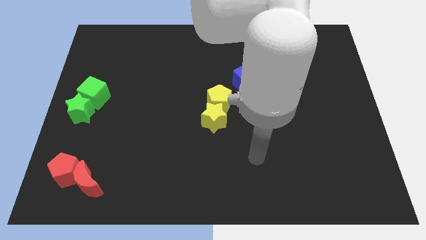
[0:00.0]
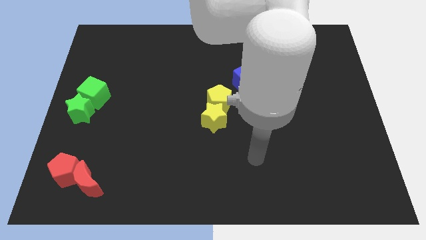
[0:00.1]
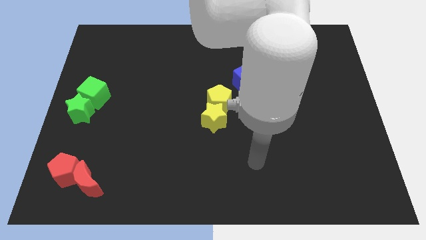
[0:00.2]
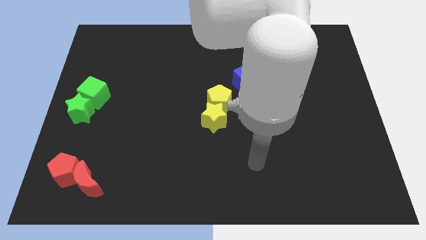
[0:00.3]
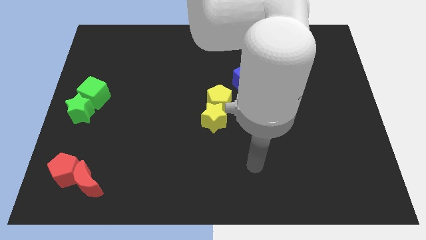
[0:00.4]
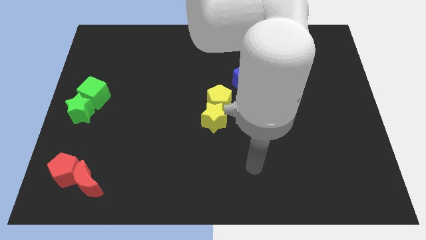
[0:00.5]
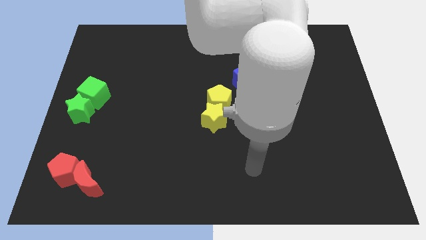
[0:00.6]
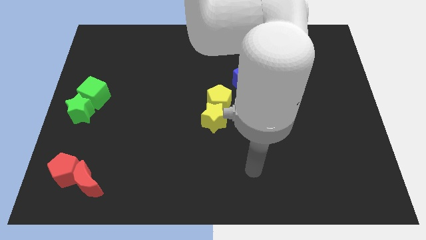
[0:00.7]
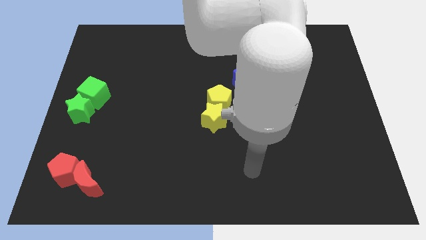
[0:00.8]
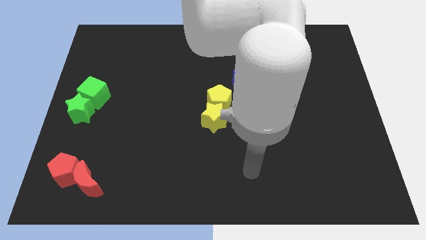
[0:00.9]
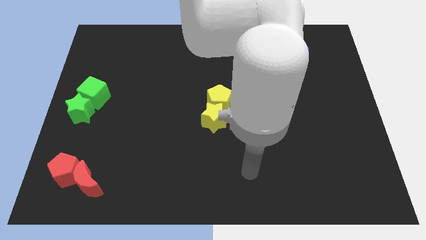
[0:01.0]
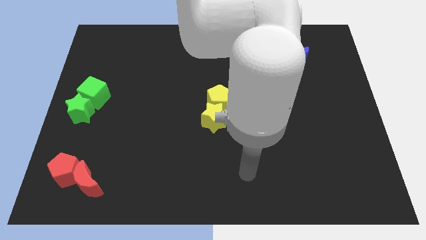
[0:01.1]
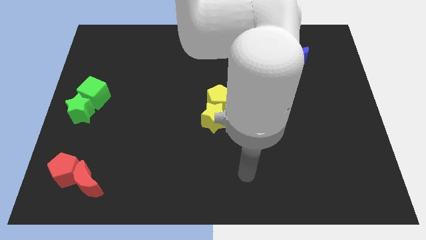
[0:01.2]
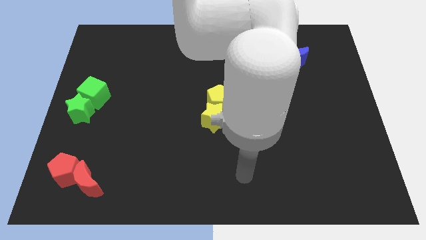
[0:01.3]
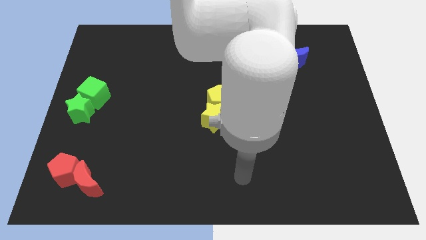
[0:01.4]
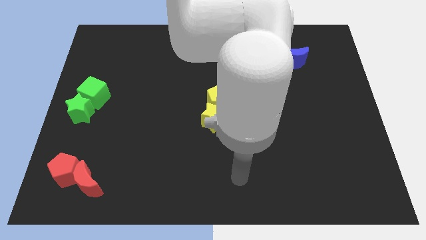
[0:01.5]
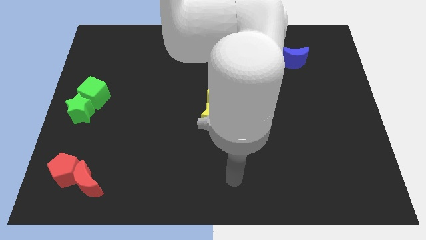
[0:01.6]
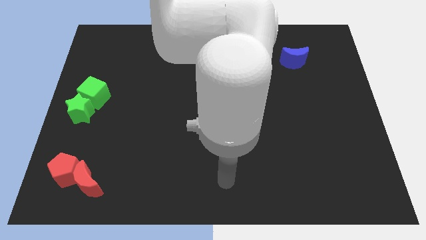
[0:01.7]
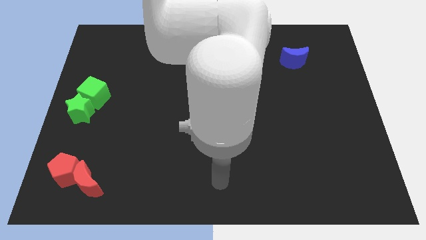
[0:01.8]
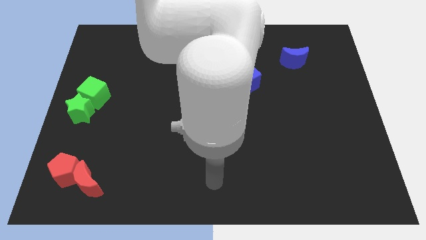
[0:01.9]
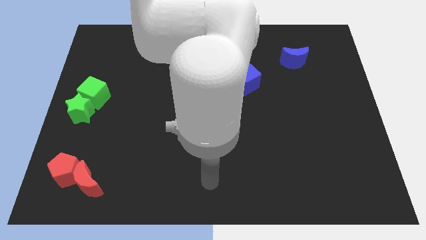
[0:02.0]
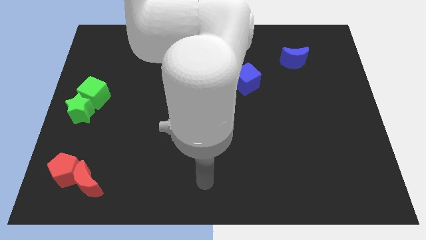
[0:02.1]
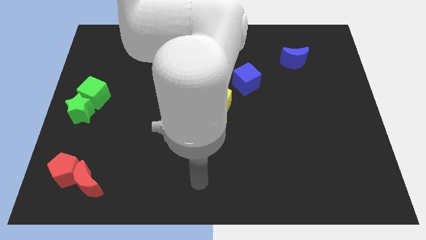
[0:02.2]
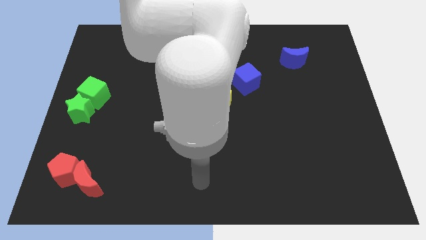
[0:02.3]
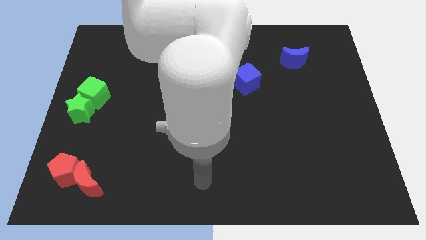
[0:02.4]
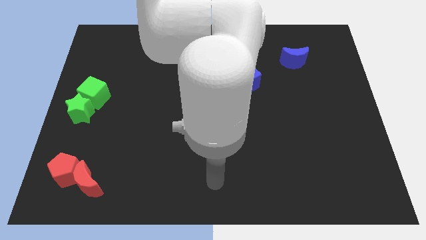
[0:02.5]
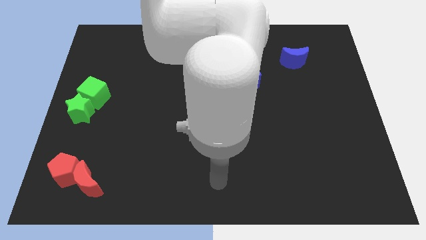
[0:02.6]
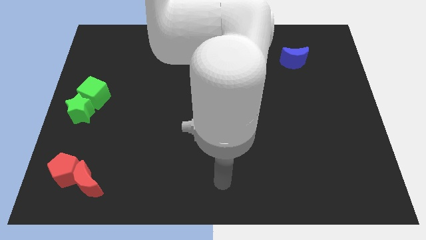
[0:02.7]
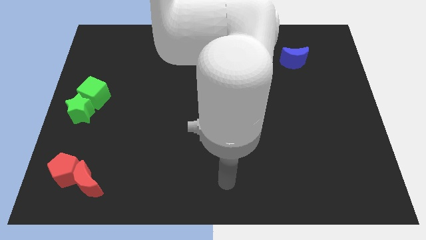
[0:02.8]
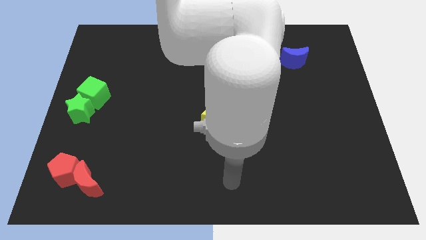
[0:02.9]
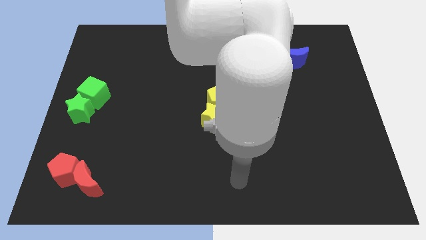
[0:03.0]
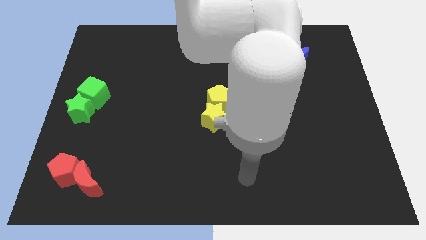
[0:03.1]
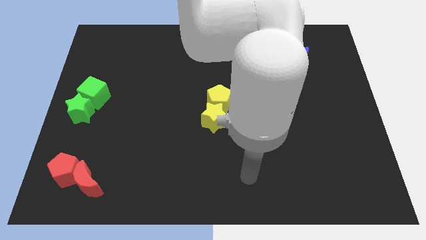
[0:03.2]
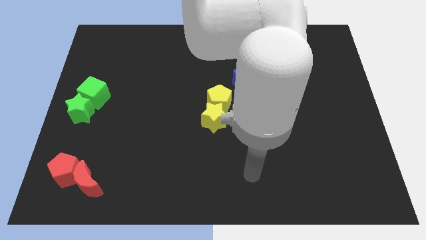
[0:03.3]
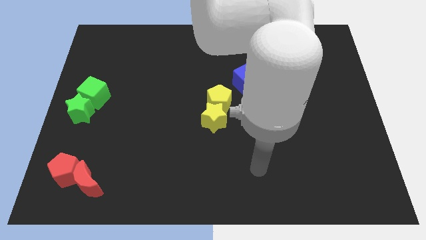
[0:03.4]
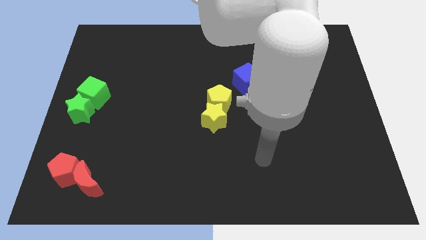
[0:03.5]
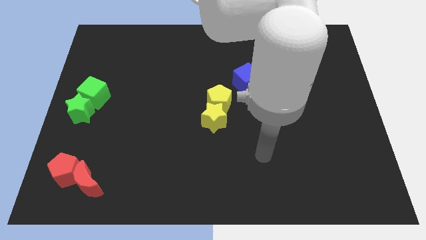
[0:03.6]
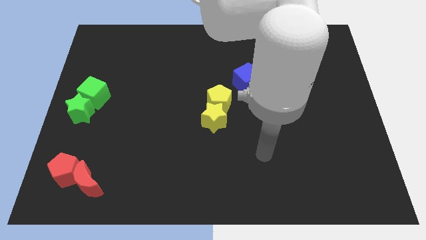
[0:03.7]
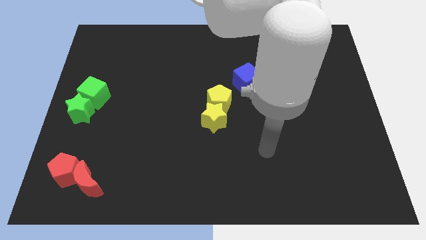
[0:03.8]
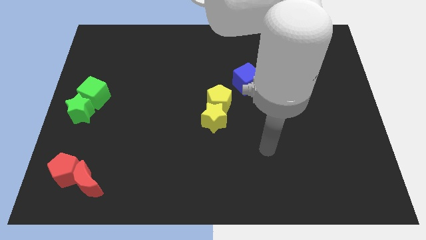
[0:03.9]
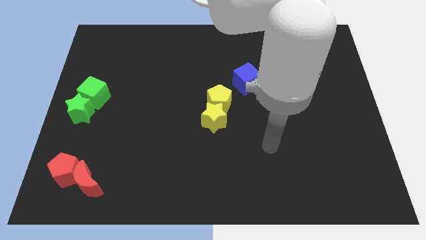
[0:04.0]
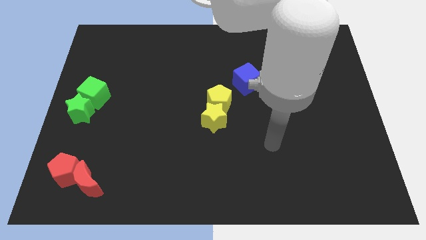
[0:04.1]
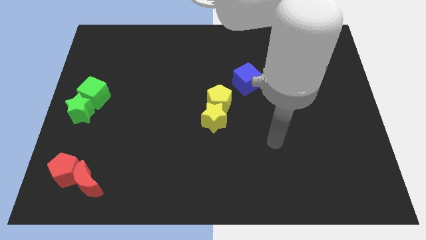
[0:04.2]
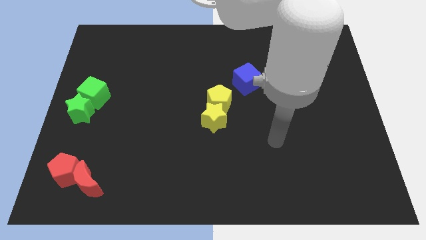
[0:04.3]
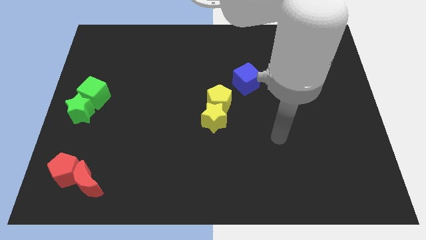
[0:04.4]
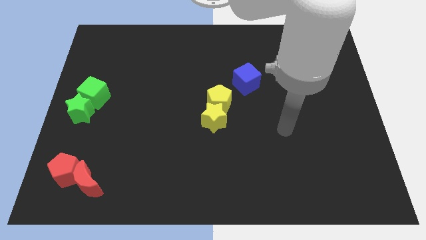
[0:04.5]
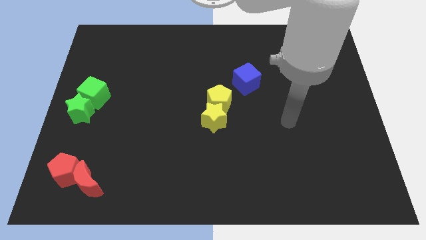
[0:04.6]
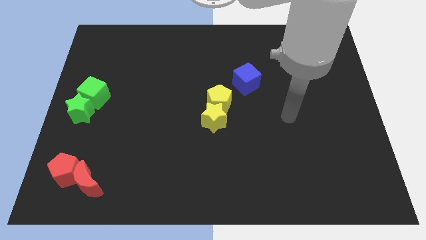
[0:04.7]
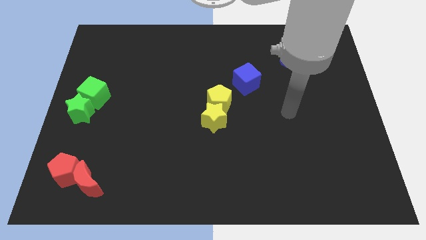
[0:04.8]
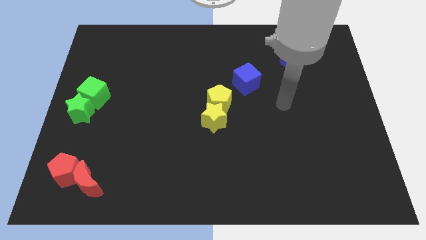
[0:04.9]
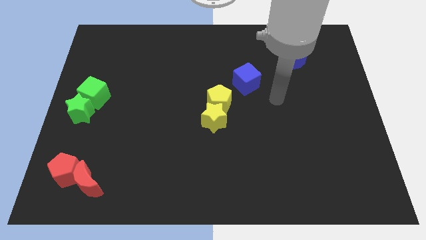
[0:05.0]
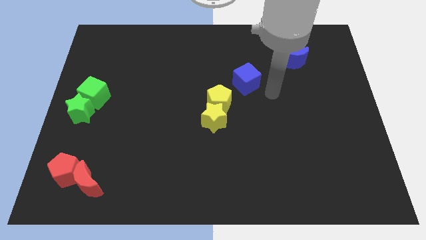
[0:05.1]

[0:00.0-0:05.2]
place your arm right of the yellow pentagon

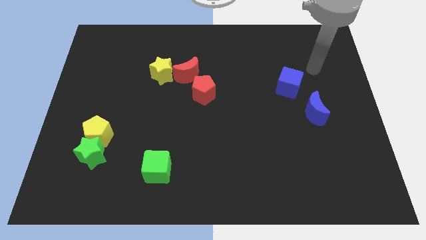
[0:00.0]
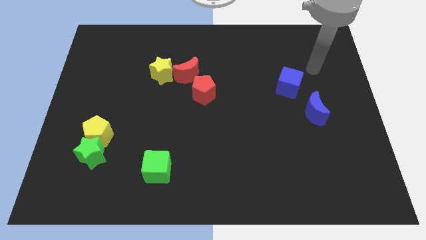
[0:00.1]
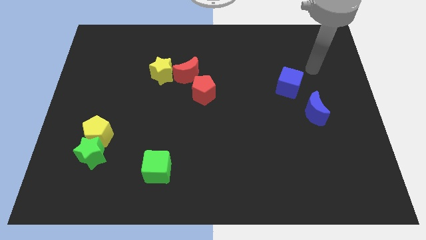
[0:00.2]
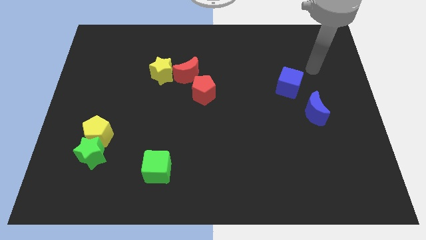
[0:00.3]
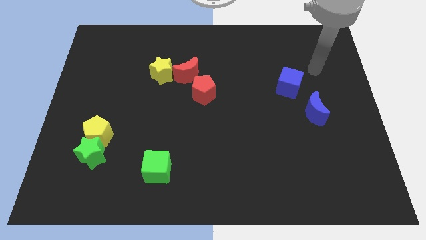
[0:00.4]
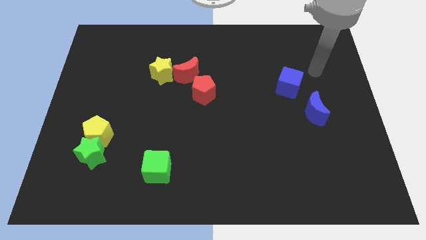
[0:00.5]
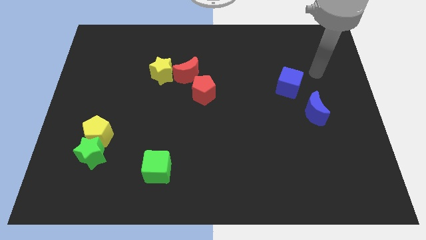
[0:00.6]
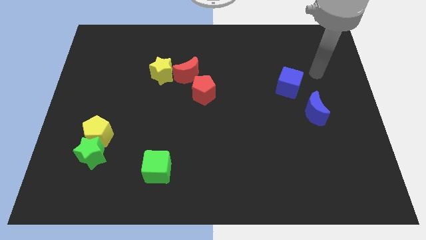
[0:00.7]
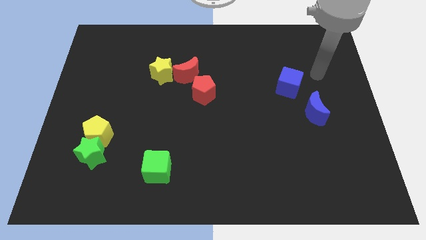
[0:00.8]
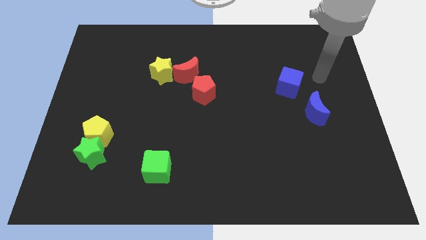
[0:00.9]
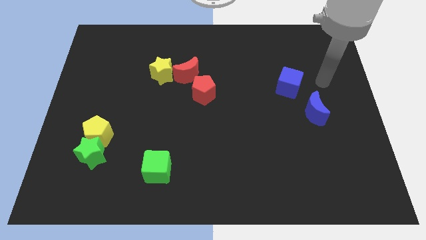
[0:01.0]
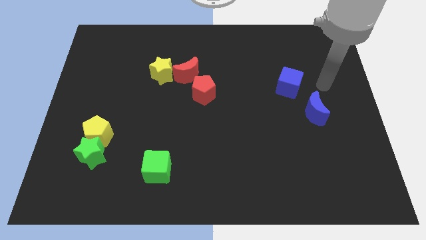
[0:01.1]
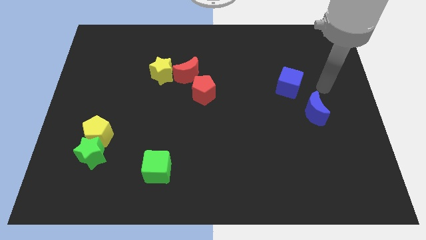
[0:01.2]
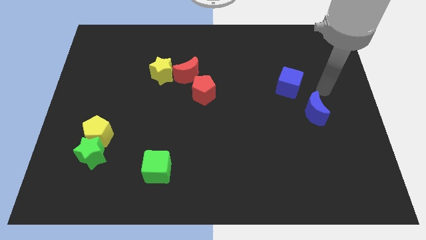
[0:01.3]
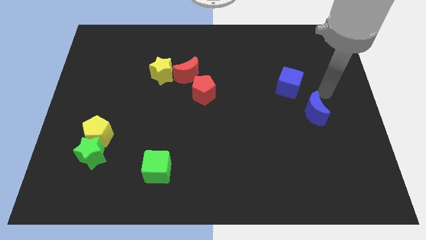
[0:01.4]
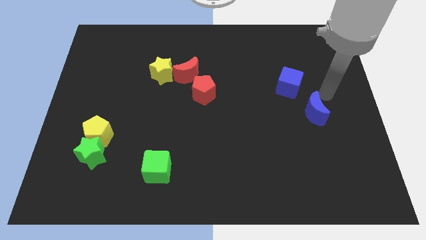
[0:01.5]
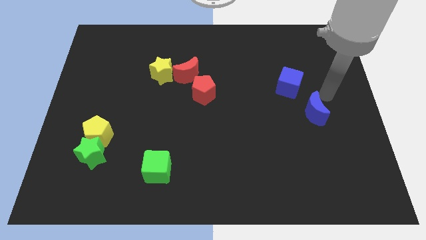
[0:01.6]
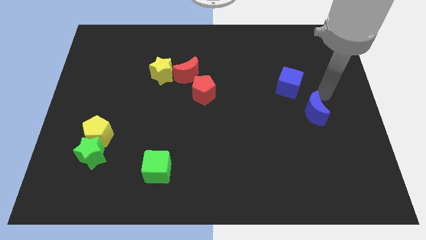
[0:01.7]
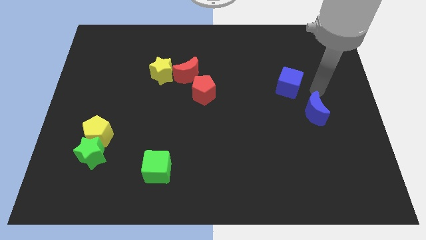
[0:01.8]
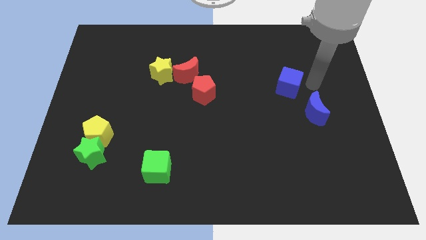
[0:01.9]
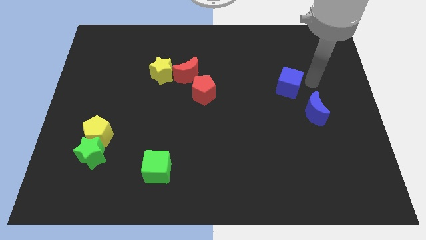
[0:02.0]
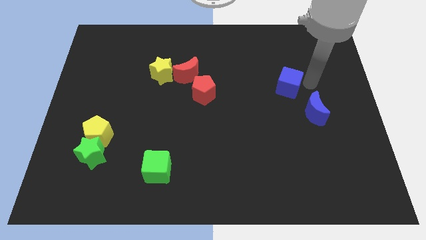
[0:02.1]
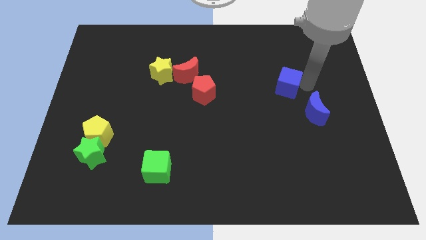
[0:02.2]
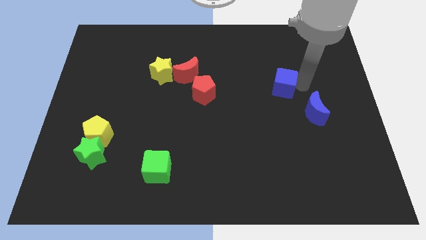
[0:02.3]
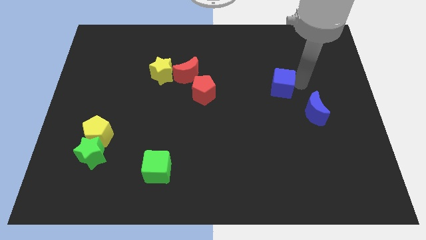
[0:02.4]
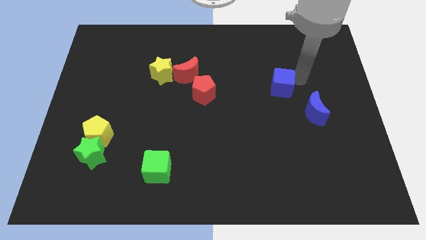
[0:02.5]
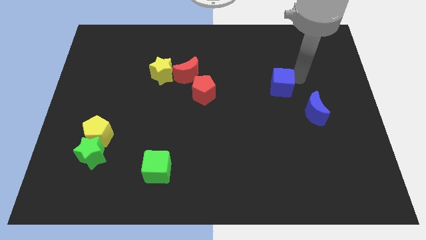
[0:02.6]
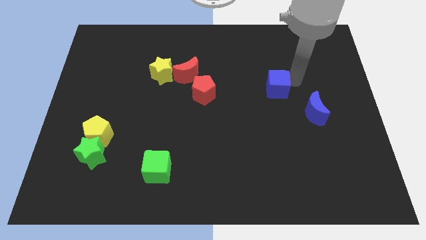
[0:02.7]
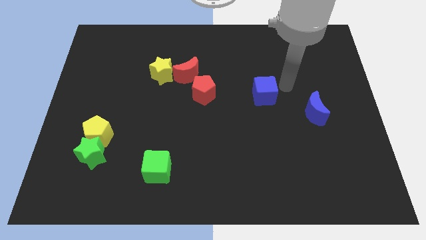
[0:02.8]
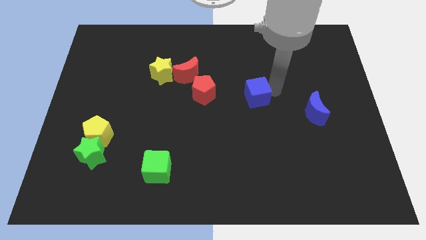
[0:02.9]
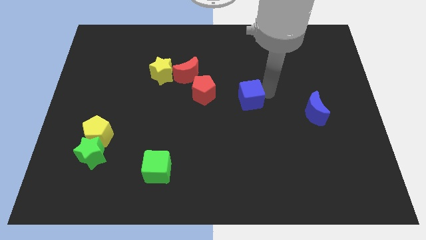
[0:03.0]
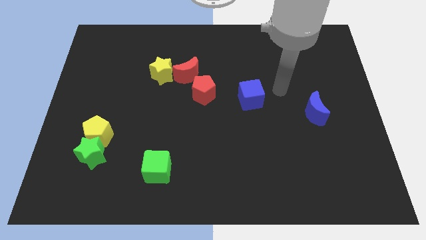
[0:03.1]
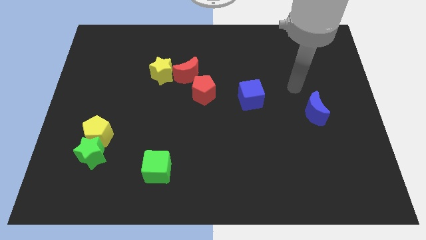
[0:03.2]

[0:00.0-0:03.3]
move the blue cube towards the right of the red pentagon

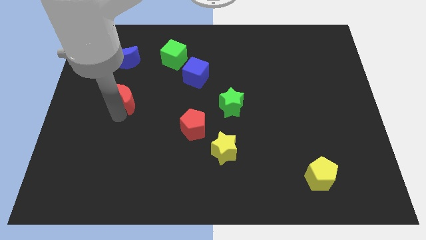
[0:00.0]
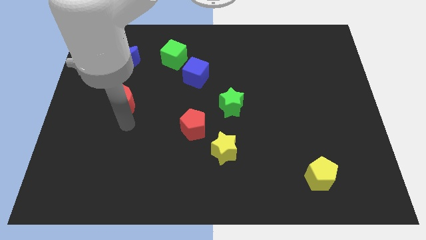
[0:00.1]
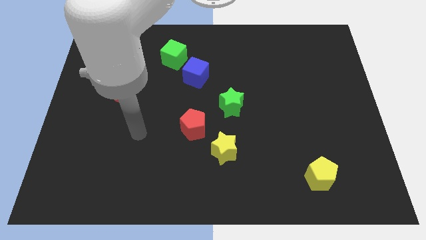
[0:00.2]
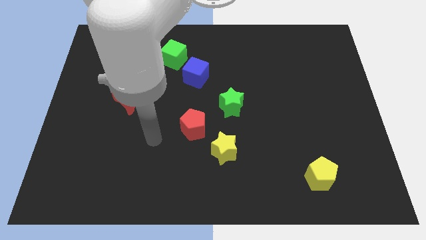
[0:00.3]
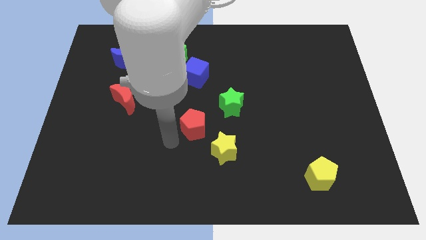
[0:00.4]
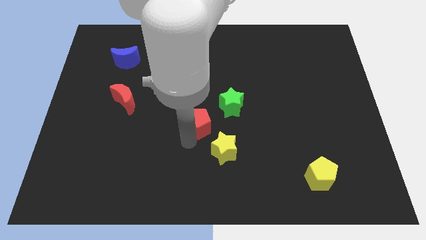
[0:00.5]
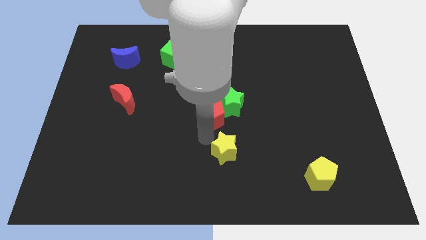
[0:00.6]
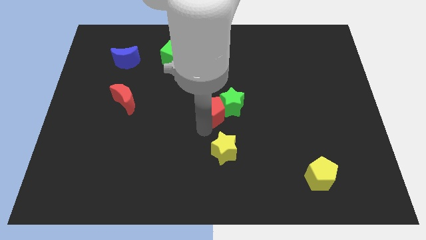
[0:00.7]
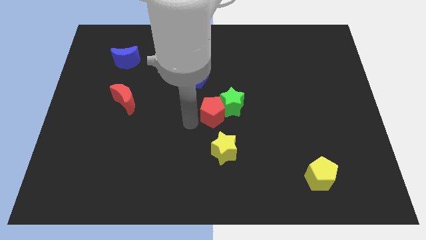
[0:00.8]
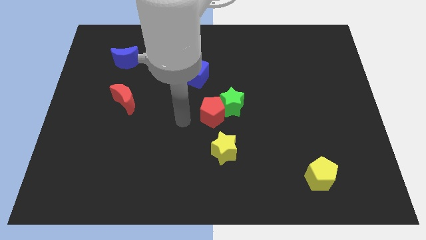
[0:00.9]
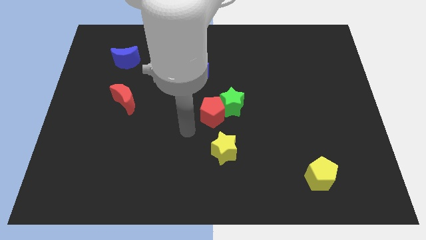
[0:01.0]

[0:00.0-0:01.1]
push red pentagon into green star
